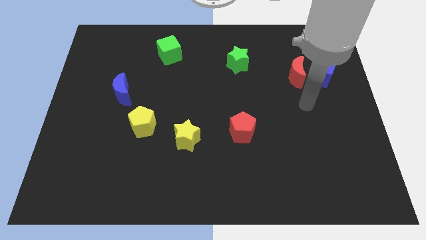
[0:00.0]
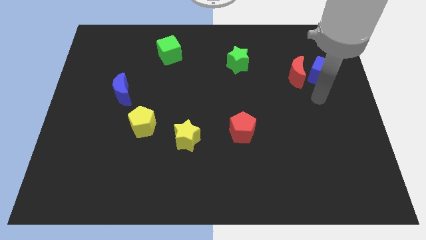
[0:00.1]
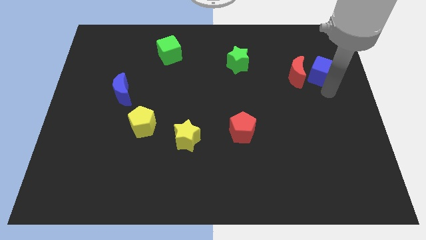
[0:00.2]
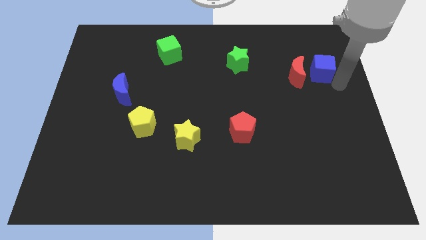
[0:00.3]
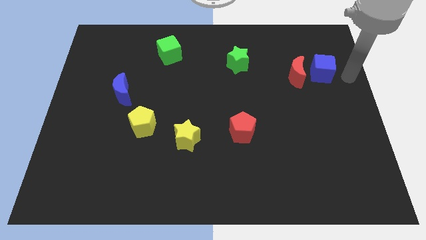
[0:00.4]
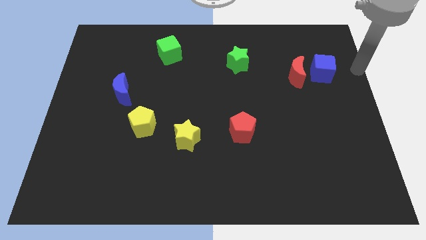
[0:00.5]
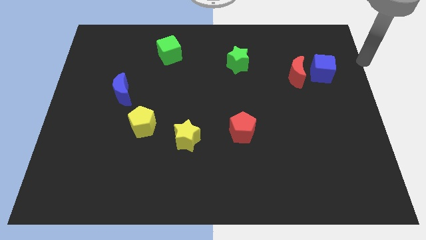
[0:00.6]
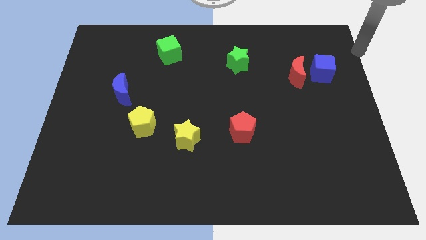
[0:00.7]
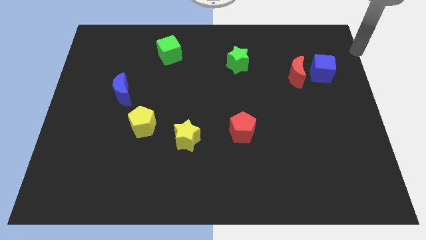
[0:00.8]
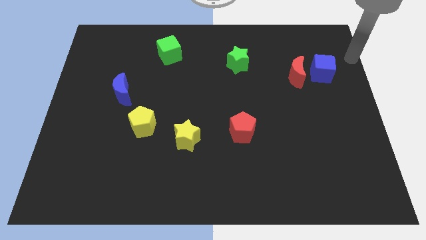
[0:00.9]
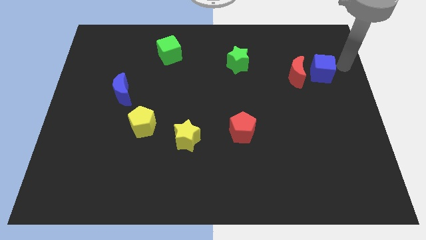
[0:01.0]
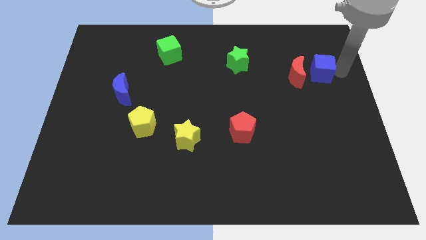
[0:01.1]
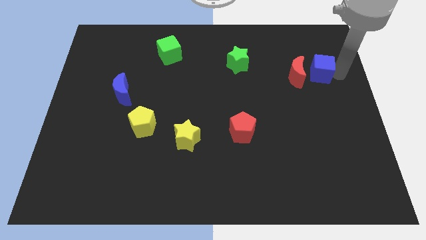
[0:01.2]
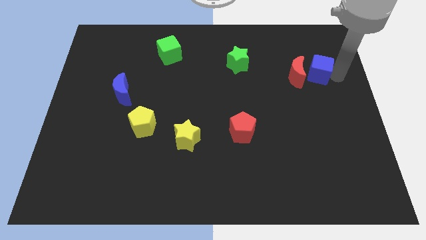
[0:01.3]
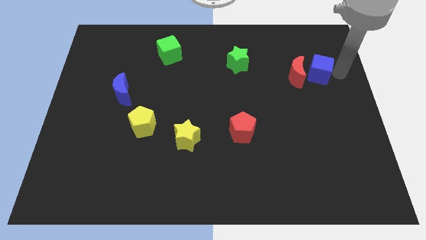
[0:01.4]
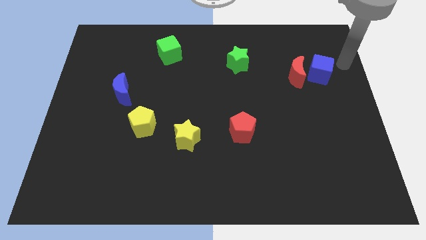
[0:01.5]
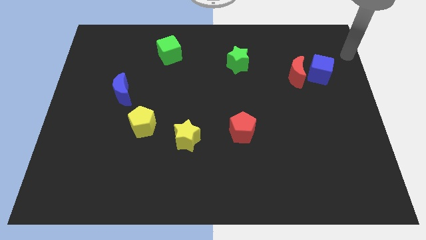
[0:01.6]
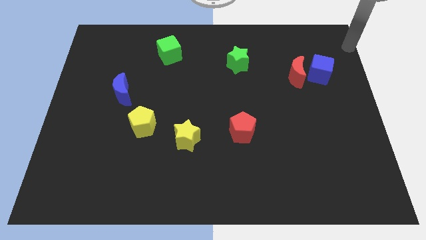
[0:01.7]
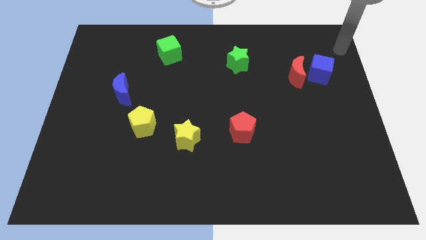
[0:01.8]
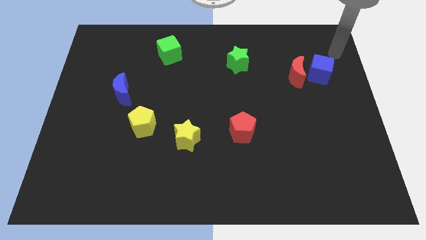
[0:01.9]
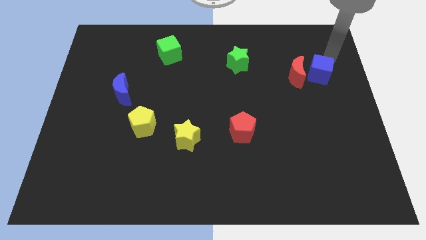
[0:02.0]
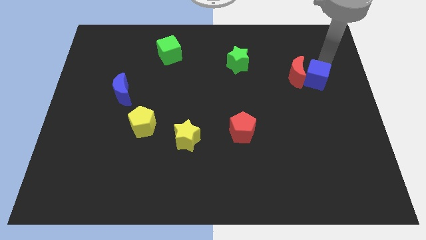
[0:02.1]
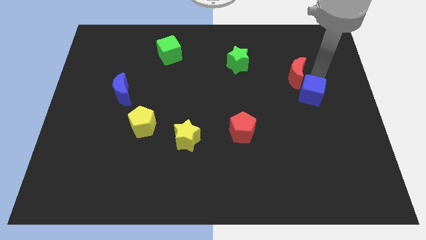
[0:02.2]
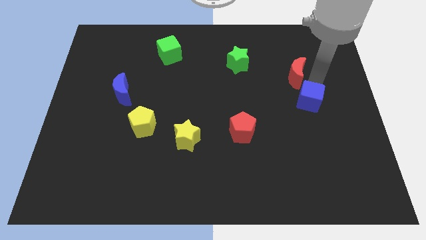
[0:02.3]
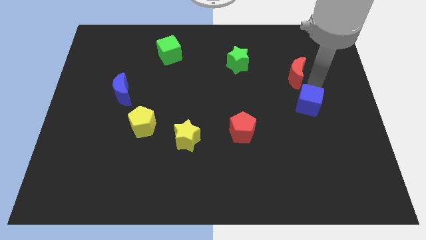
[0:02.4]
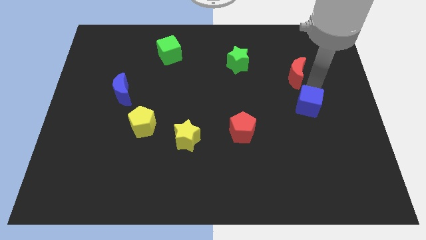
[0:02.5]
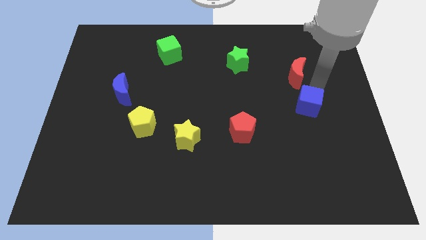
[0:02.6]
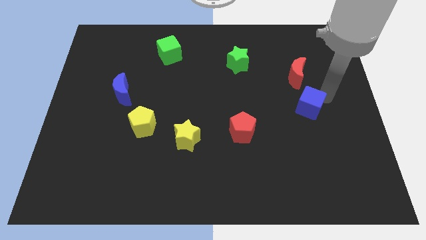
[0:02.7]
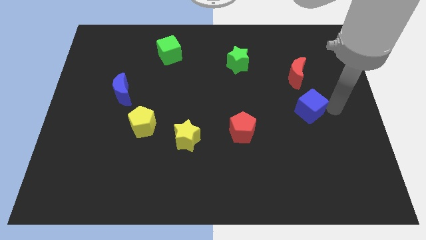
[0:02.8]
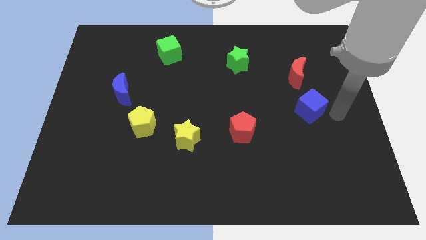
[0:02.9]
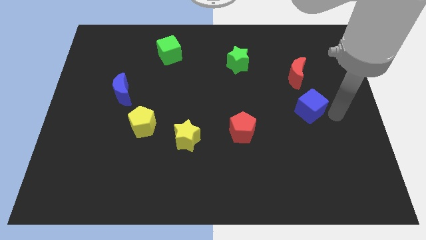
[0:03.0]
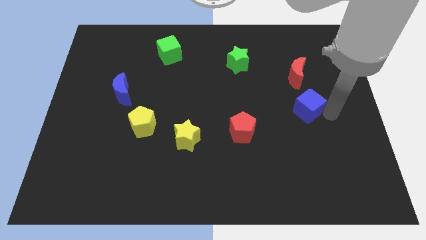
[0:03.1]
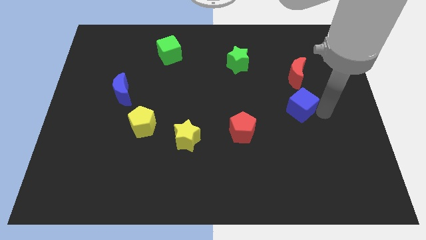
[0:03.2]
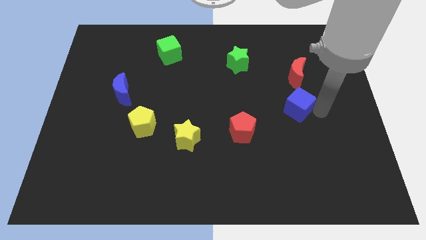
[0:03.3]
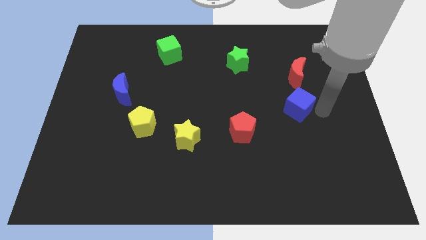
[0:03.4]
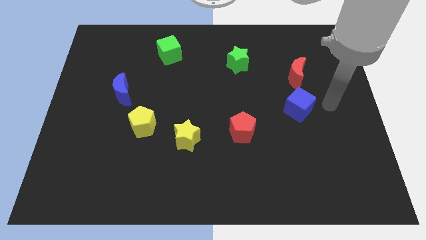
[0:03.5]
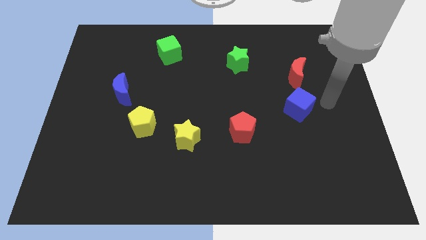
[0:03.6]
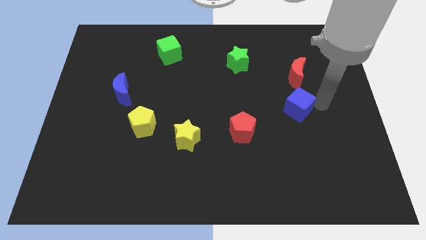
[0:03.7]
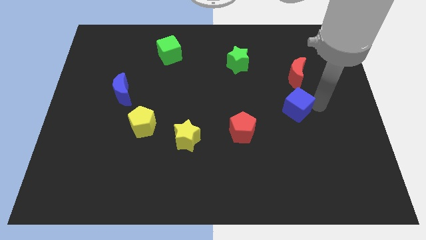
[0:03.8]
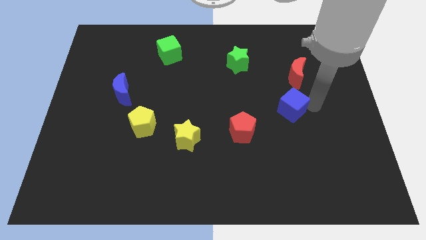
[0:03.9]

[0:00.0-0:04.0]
place the blue cube to the bottom side of the red moon

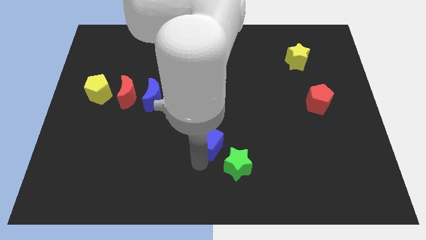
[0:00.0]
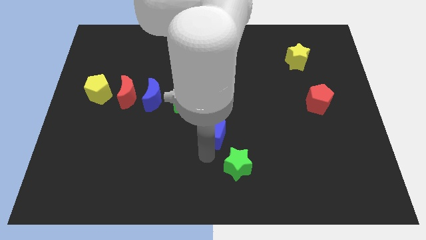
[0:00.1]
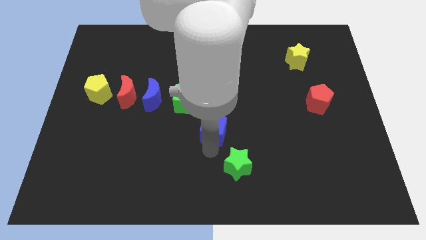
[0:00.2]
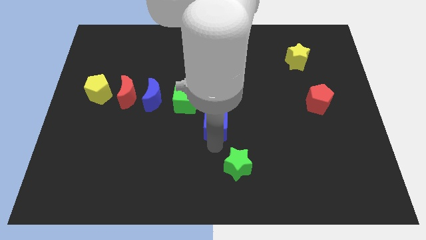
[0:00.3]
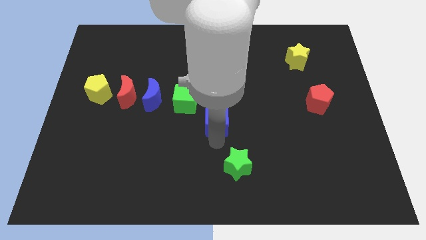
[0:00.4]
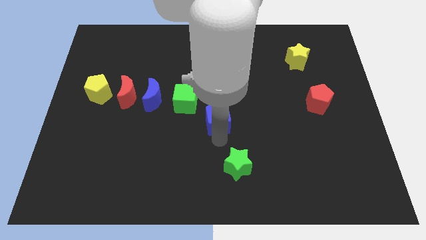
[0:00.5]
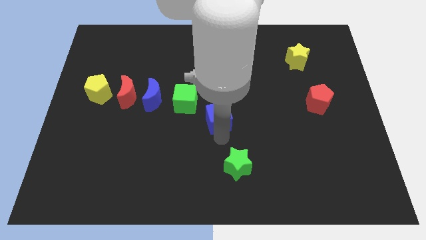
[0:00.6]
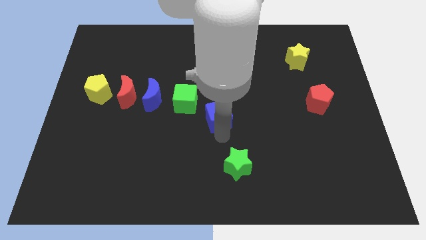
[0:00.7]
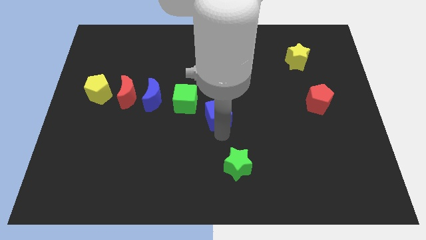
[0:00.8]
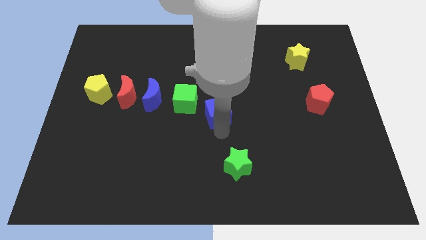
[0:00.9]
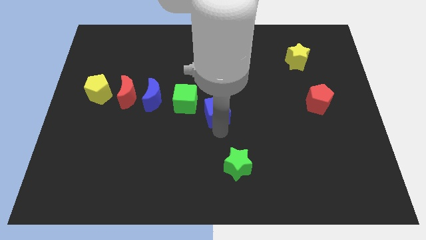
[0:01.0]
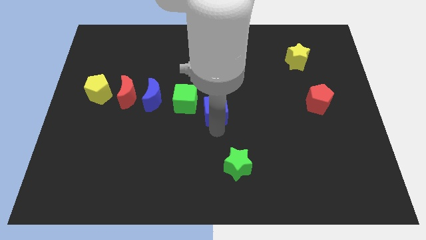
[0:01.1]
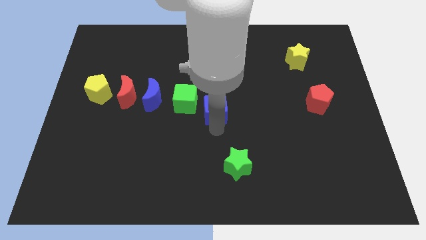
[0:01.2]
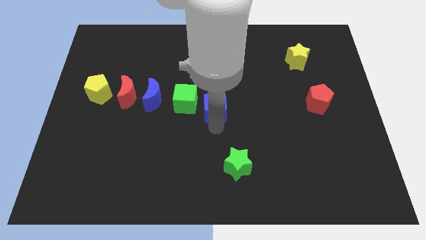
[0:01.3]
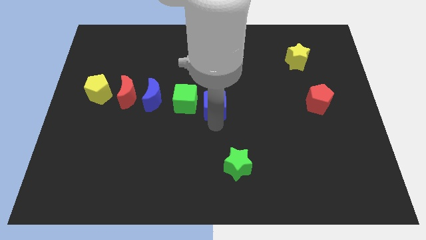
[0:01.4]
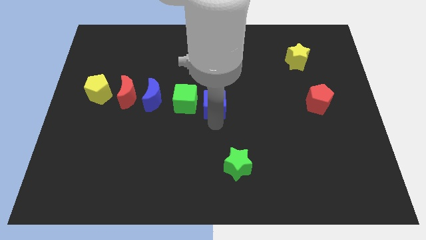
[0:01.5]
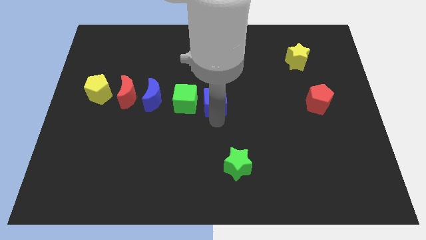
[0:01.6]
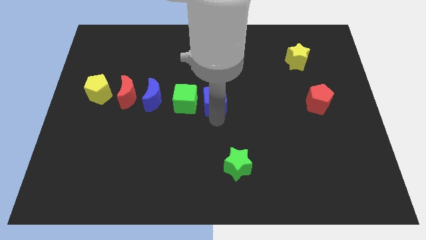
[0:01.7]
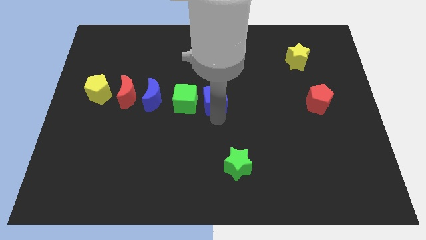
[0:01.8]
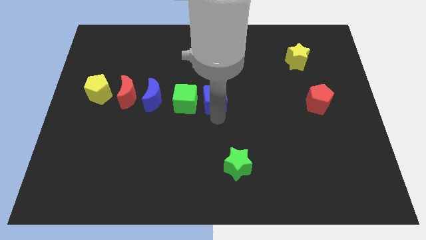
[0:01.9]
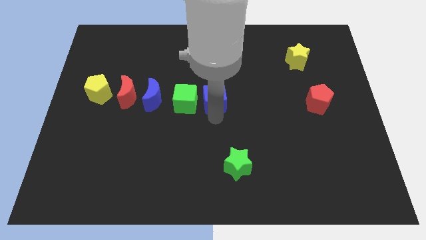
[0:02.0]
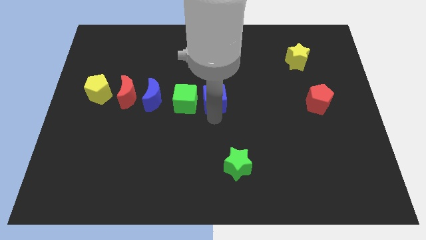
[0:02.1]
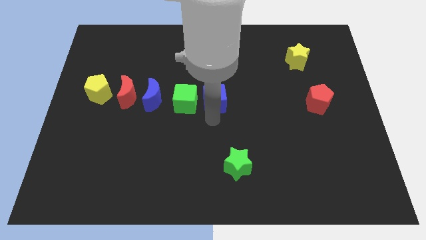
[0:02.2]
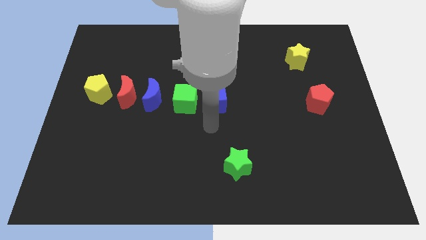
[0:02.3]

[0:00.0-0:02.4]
place blue cube to the right of green cube

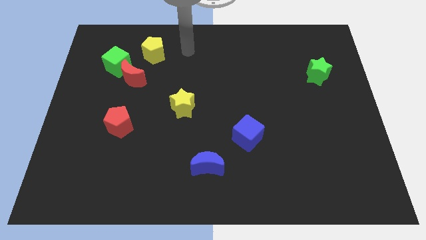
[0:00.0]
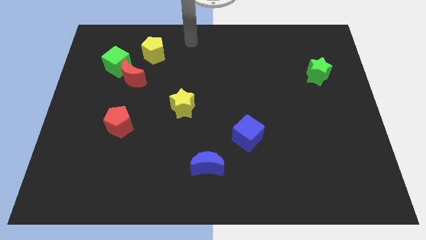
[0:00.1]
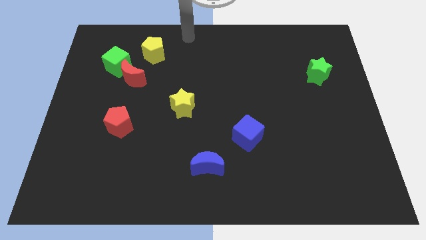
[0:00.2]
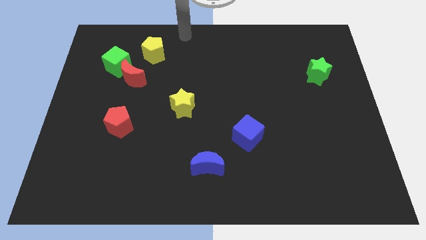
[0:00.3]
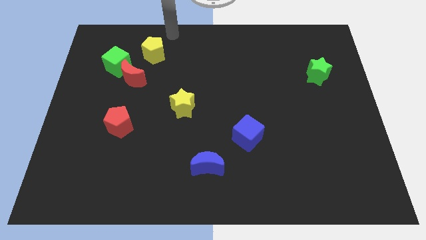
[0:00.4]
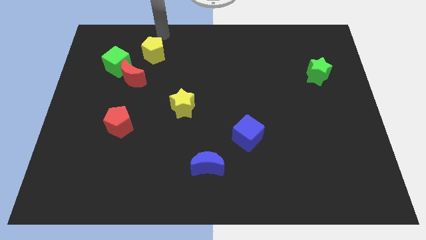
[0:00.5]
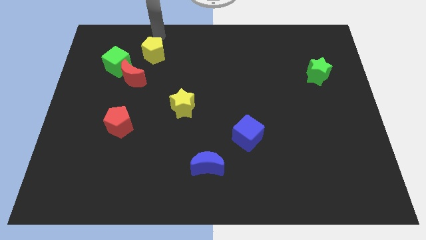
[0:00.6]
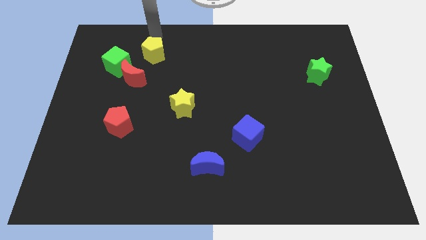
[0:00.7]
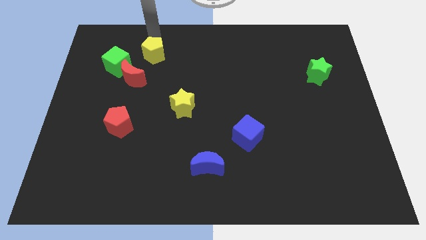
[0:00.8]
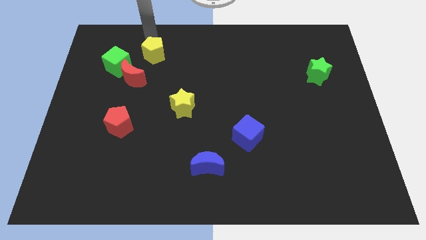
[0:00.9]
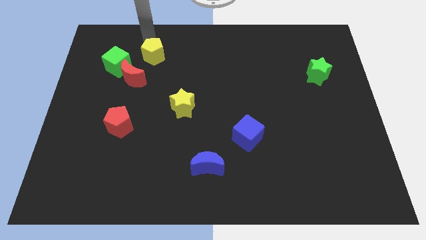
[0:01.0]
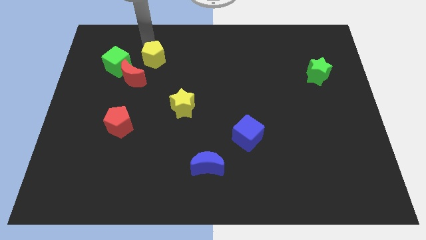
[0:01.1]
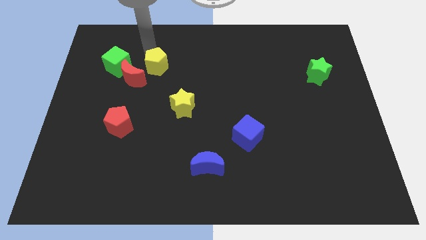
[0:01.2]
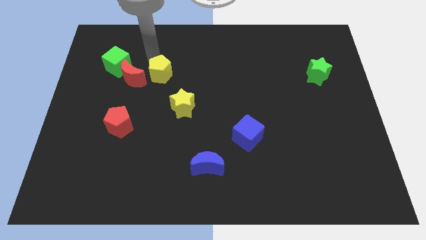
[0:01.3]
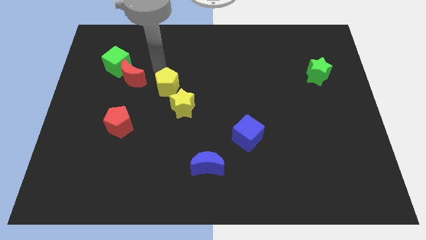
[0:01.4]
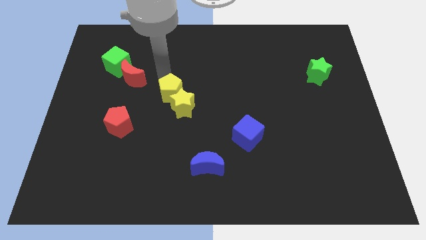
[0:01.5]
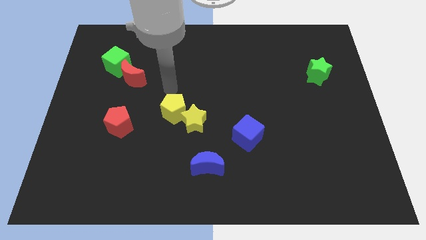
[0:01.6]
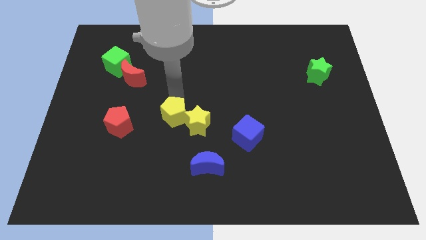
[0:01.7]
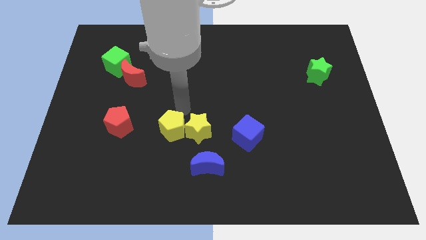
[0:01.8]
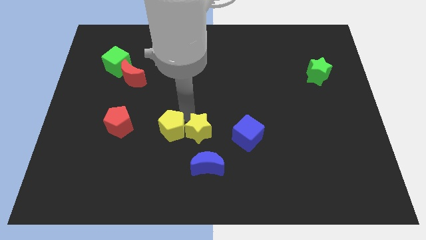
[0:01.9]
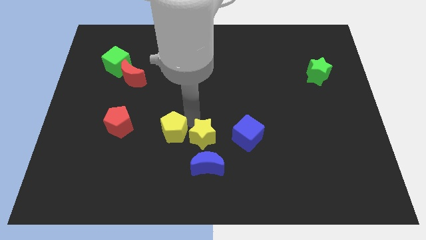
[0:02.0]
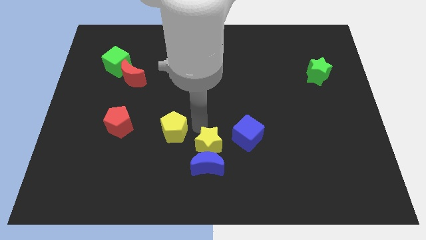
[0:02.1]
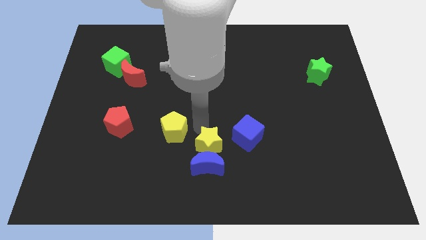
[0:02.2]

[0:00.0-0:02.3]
push the yellow star with yellow pentagon

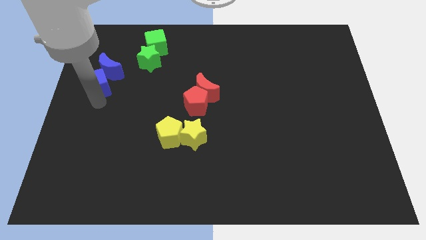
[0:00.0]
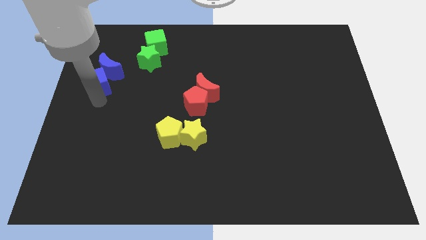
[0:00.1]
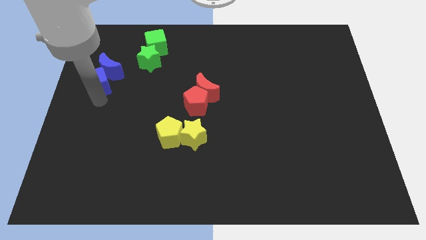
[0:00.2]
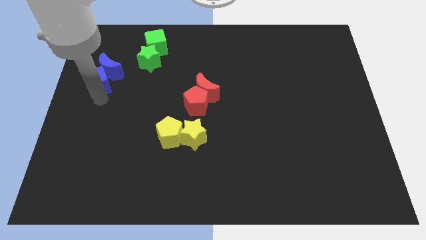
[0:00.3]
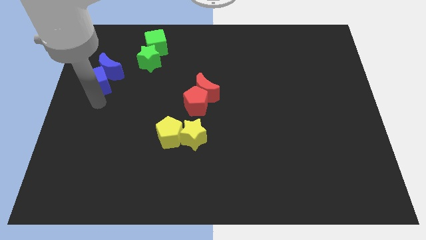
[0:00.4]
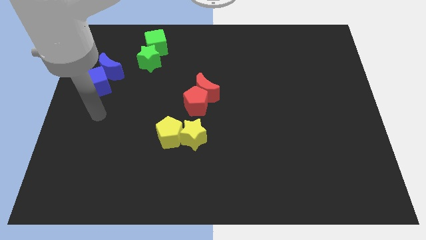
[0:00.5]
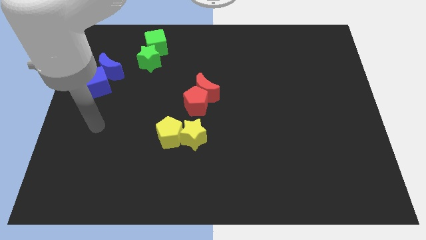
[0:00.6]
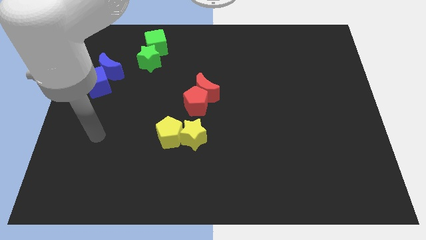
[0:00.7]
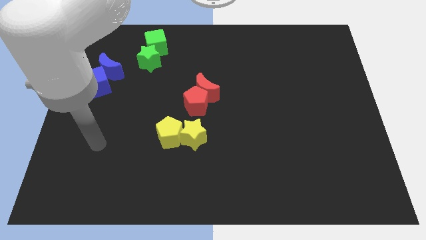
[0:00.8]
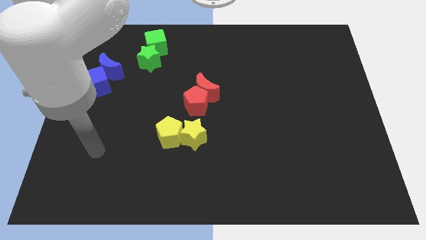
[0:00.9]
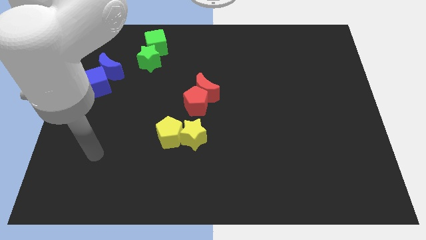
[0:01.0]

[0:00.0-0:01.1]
push the blue cube into the blue crescent on top left of the board
